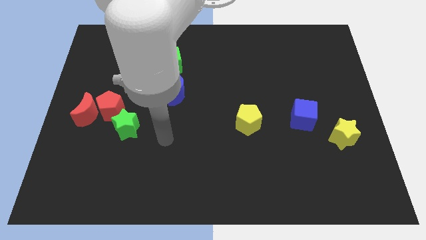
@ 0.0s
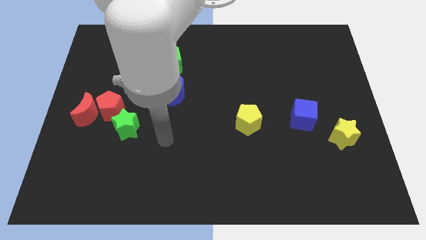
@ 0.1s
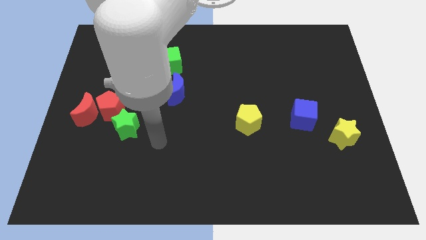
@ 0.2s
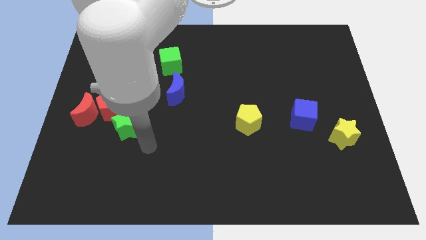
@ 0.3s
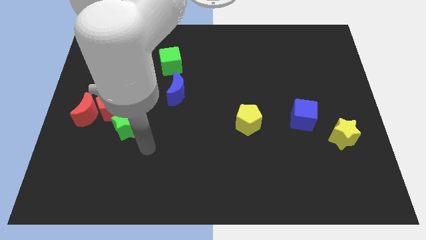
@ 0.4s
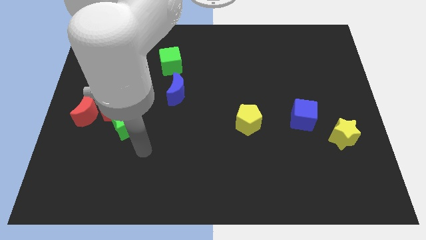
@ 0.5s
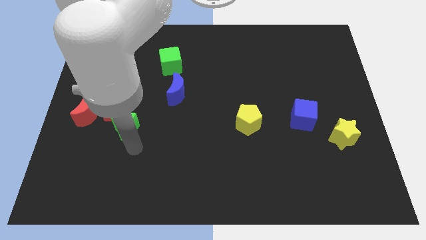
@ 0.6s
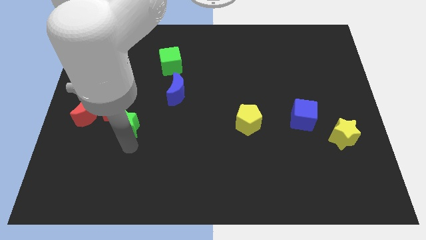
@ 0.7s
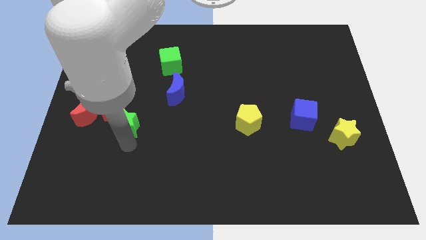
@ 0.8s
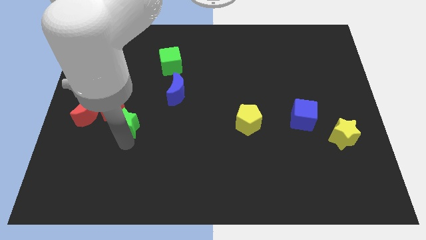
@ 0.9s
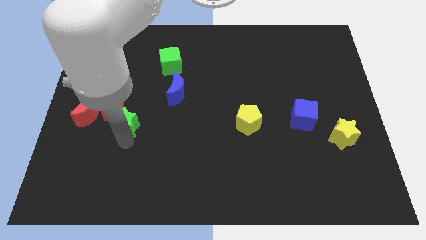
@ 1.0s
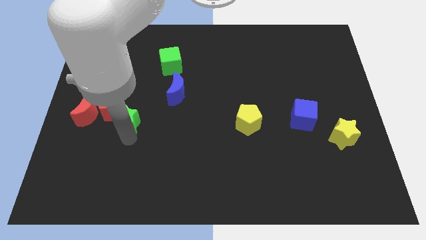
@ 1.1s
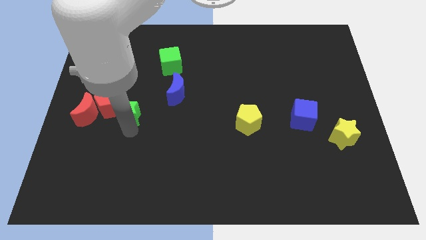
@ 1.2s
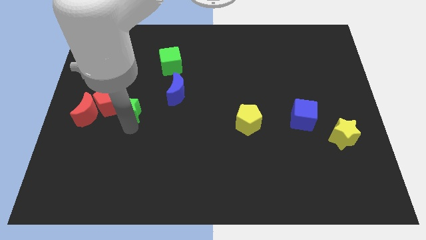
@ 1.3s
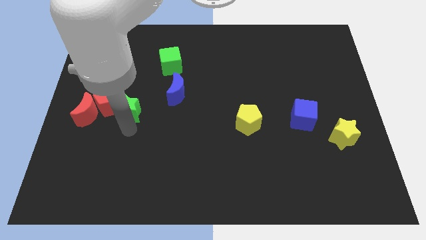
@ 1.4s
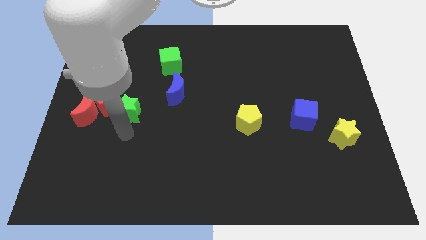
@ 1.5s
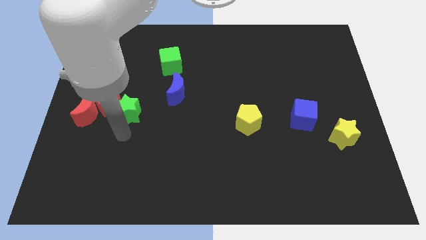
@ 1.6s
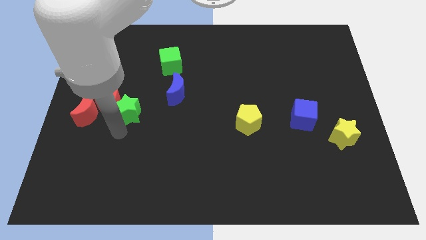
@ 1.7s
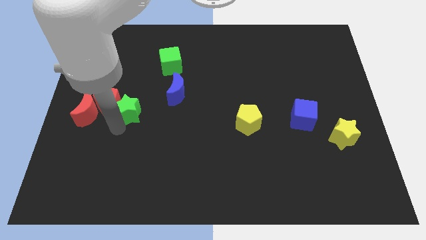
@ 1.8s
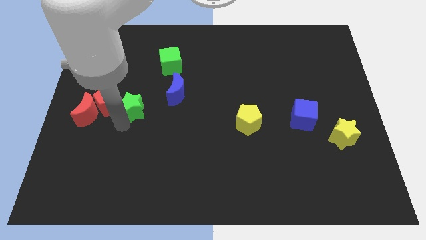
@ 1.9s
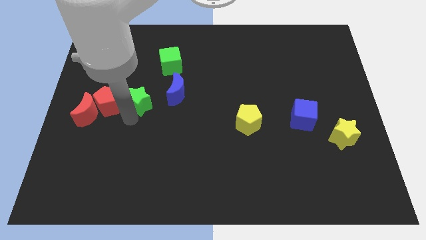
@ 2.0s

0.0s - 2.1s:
push the green star to the right of the red pentagon

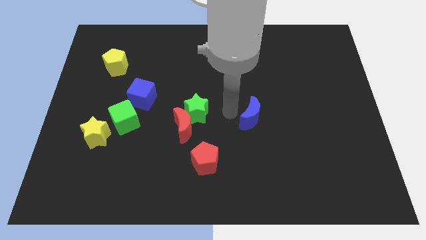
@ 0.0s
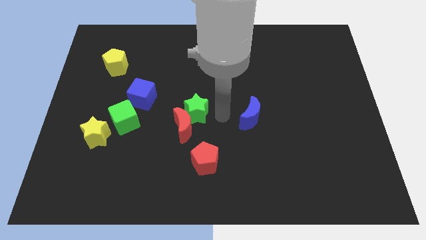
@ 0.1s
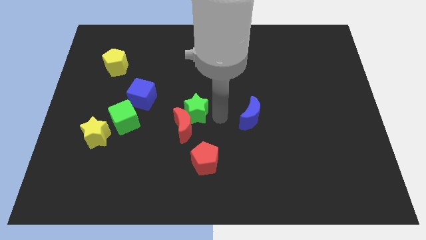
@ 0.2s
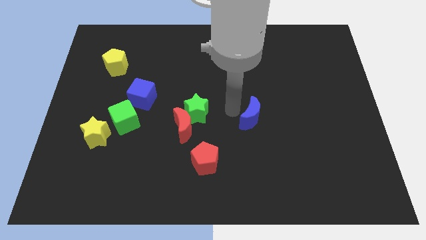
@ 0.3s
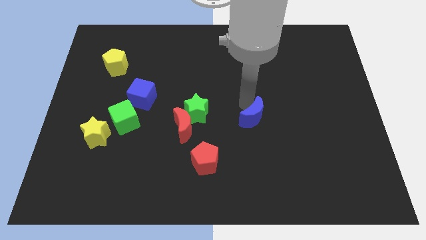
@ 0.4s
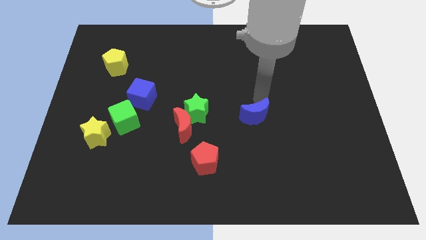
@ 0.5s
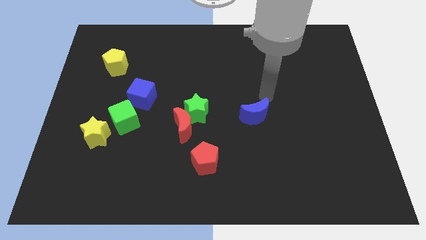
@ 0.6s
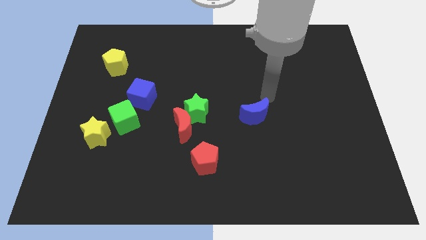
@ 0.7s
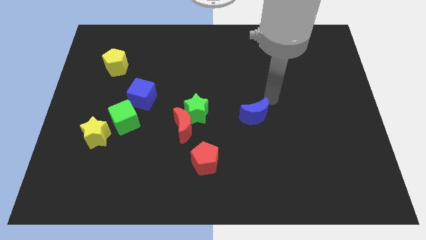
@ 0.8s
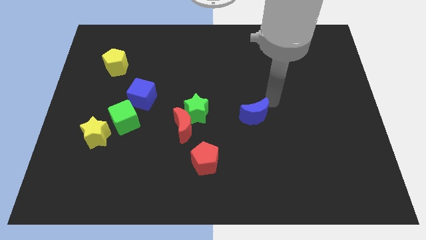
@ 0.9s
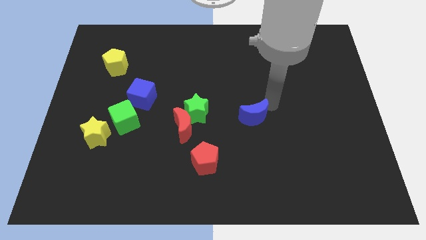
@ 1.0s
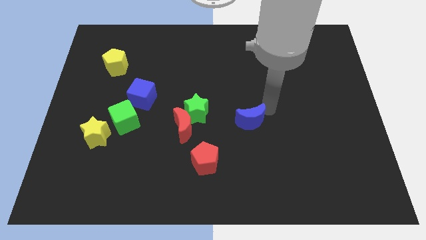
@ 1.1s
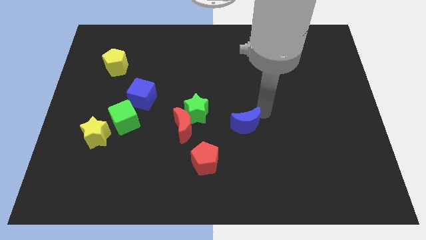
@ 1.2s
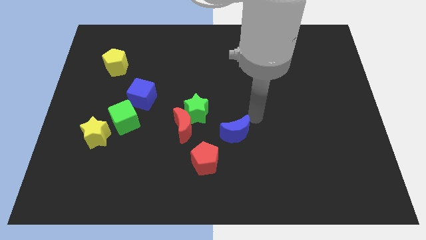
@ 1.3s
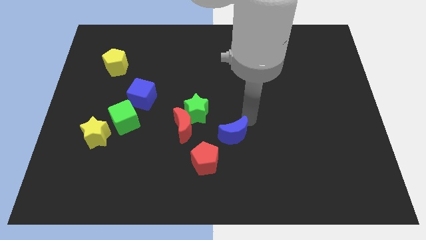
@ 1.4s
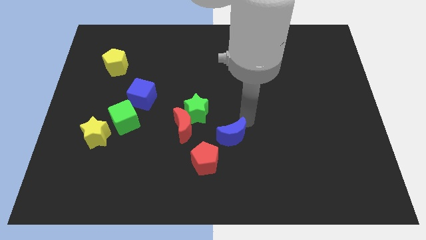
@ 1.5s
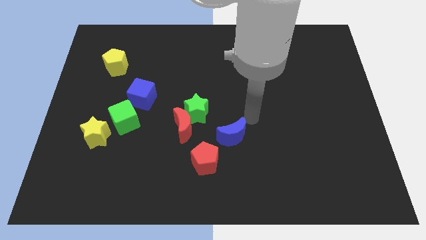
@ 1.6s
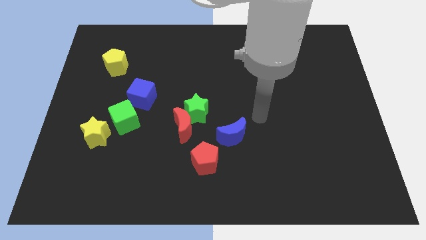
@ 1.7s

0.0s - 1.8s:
push the blue moon diagonally above the top right side of the blue moon

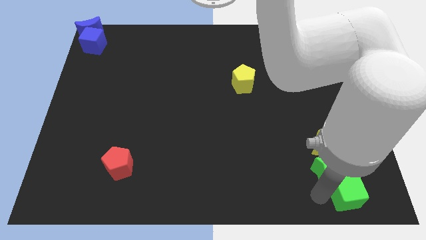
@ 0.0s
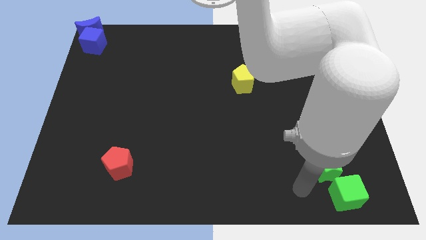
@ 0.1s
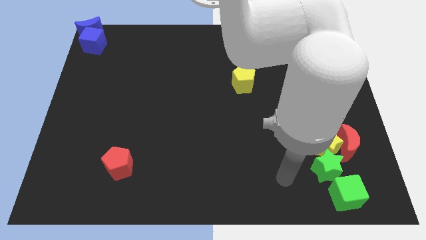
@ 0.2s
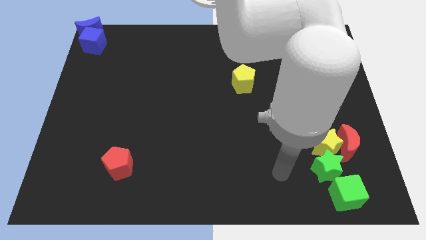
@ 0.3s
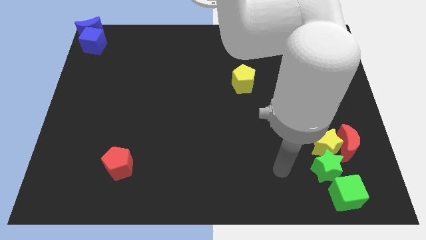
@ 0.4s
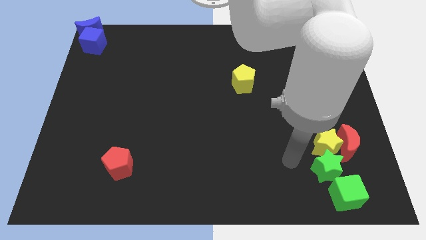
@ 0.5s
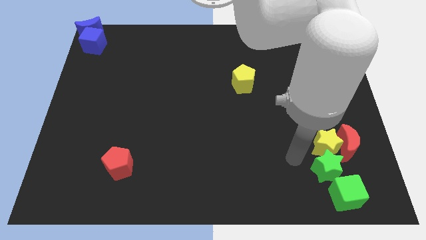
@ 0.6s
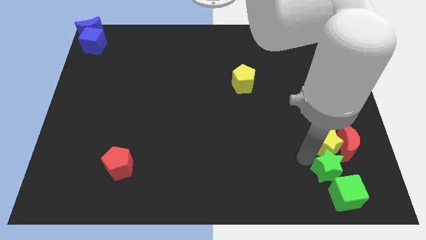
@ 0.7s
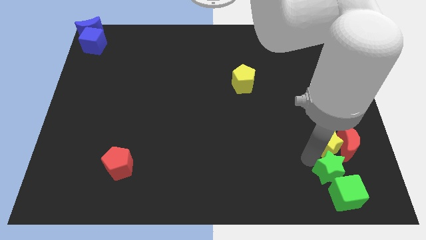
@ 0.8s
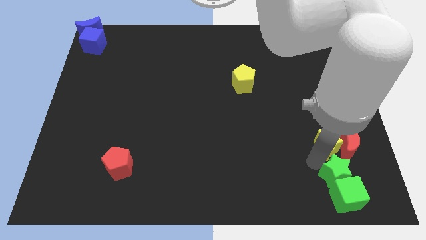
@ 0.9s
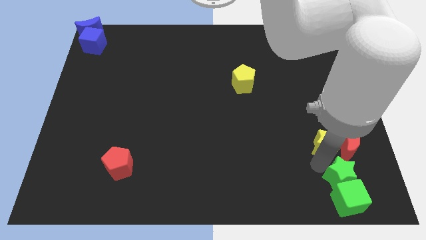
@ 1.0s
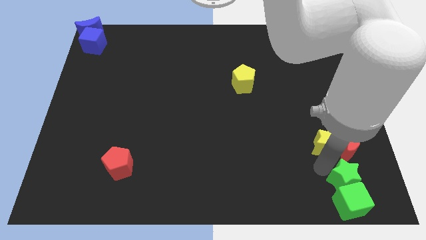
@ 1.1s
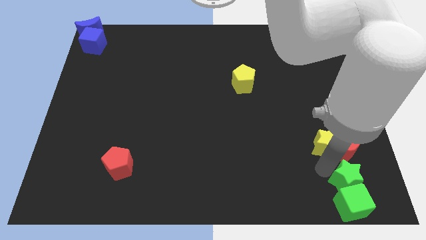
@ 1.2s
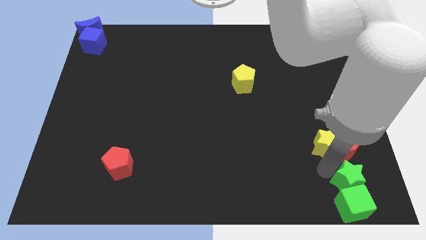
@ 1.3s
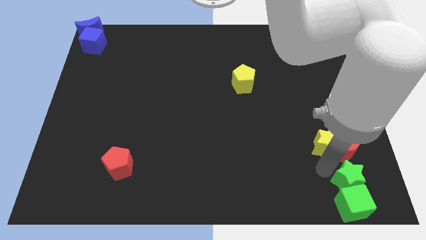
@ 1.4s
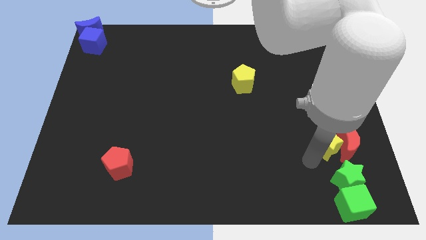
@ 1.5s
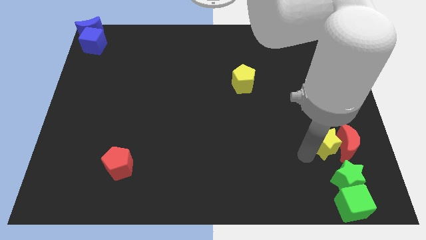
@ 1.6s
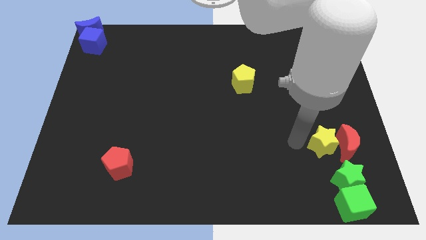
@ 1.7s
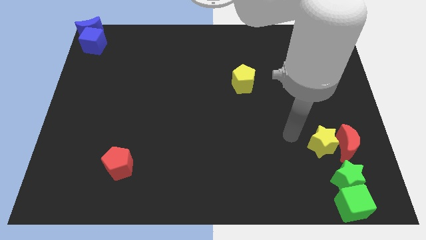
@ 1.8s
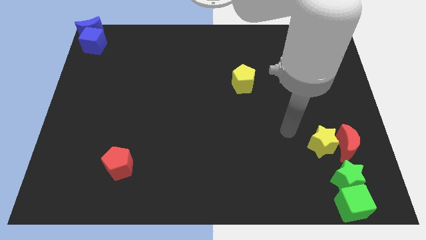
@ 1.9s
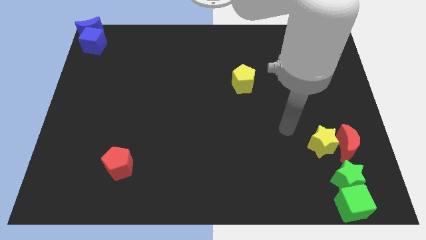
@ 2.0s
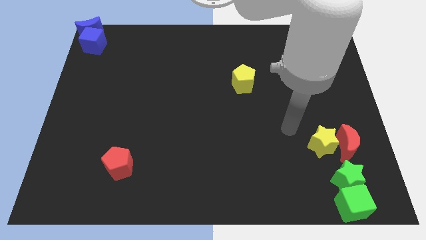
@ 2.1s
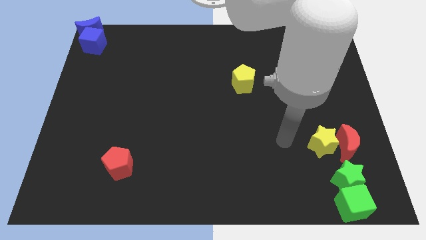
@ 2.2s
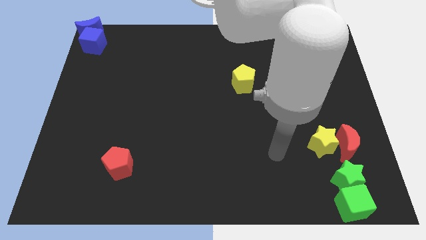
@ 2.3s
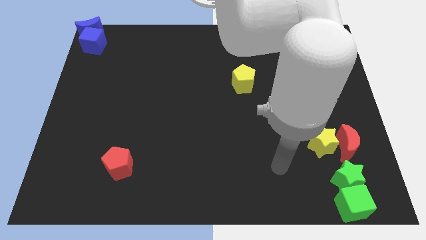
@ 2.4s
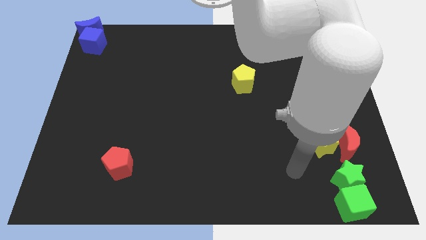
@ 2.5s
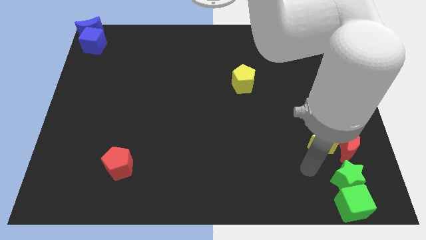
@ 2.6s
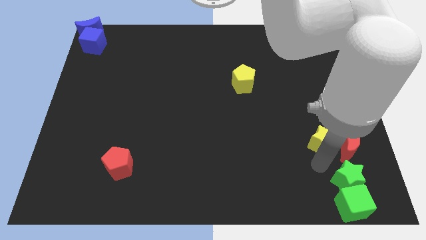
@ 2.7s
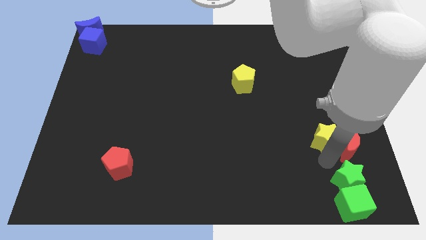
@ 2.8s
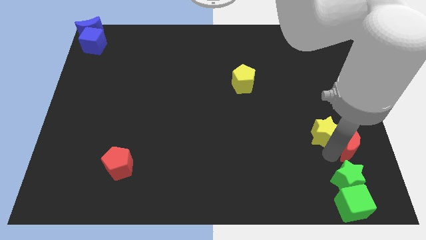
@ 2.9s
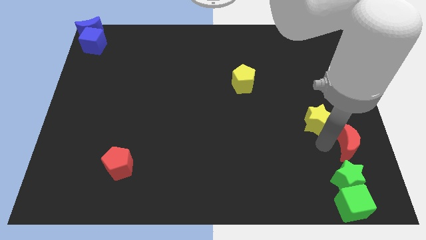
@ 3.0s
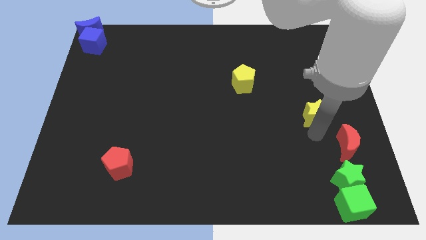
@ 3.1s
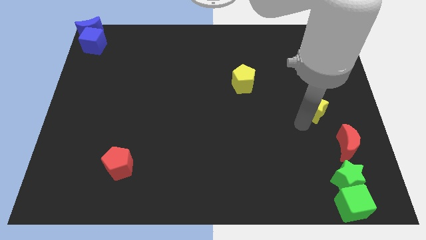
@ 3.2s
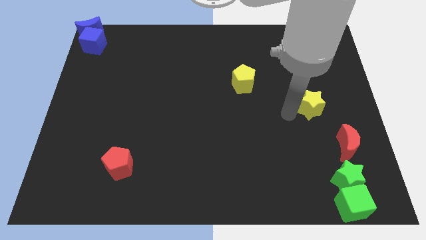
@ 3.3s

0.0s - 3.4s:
separate the yellow star from a group of blocks

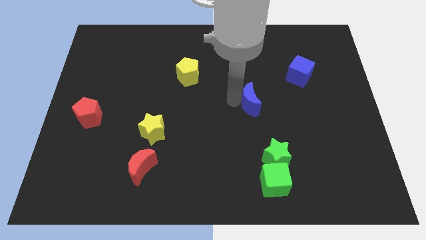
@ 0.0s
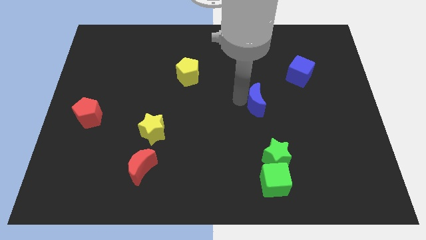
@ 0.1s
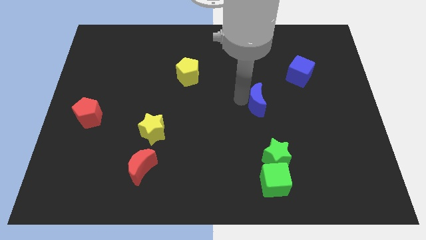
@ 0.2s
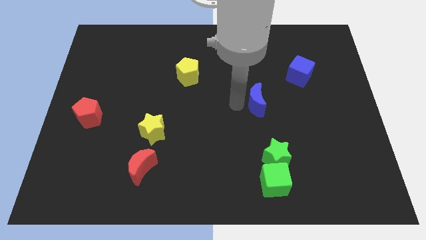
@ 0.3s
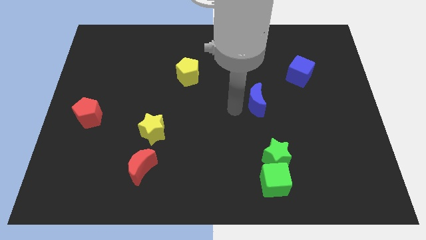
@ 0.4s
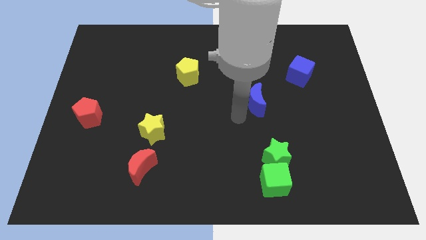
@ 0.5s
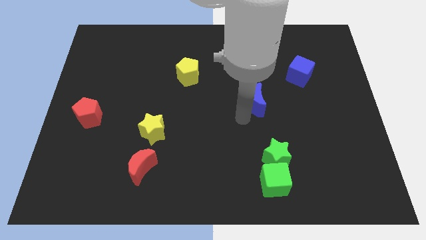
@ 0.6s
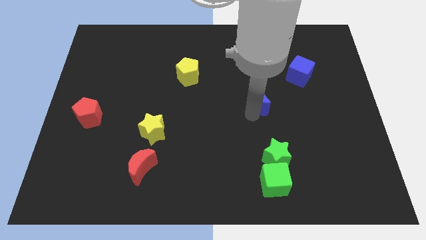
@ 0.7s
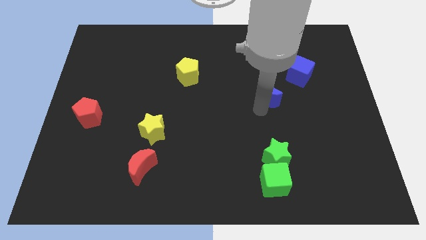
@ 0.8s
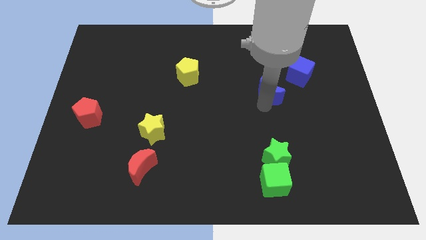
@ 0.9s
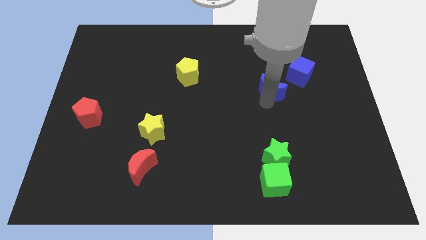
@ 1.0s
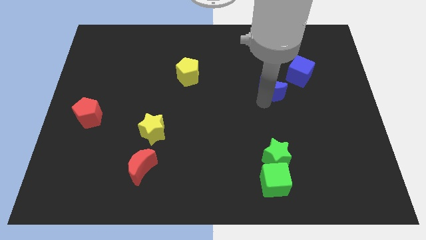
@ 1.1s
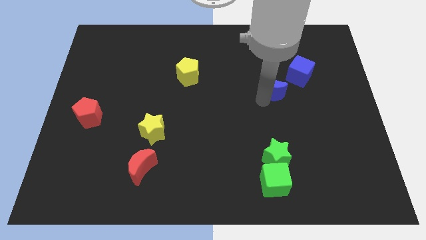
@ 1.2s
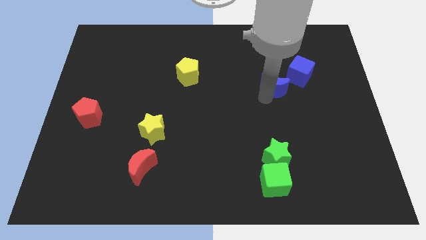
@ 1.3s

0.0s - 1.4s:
place blue moon to the bottom left of the blue cube

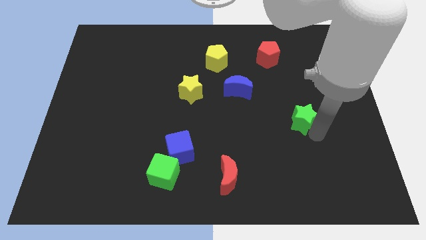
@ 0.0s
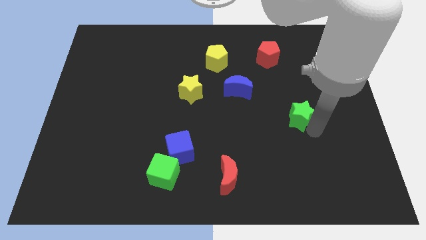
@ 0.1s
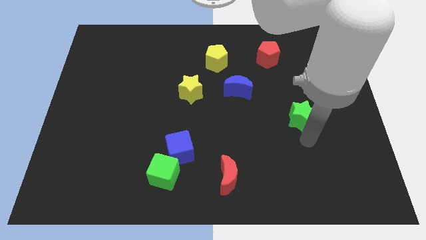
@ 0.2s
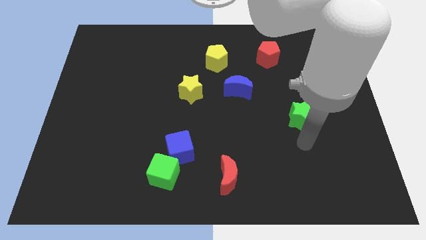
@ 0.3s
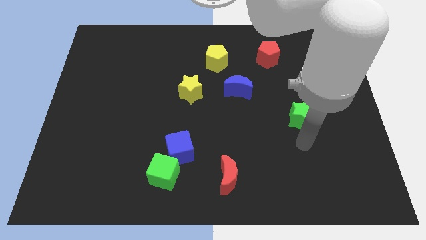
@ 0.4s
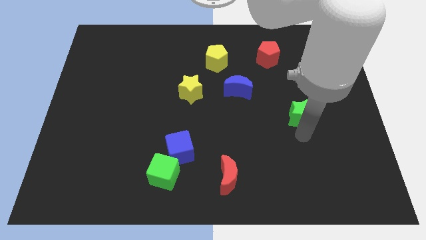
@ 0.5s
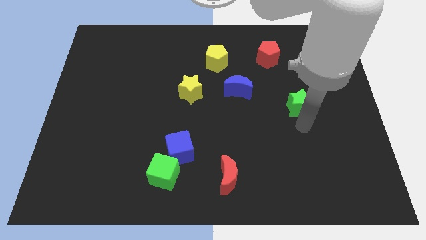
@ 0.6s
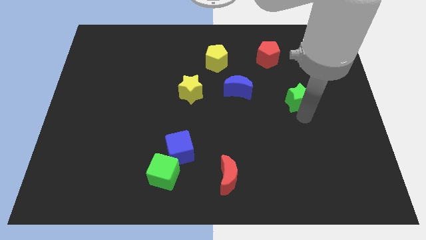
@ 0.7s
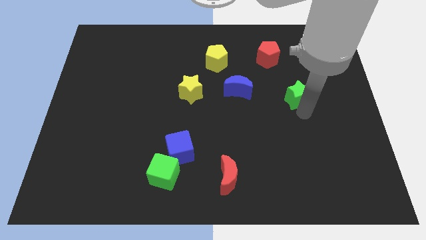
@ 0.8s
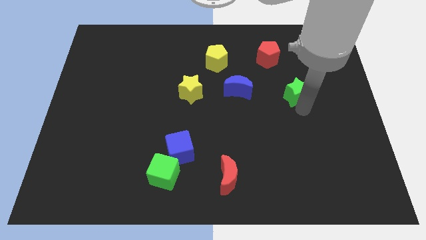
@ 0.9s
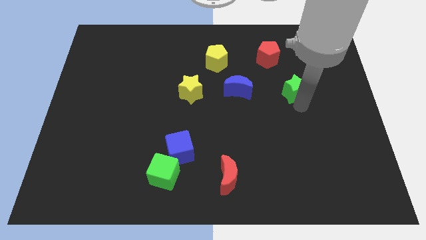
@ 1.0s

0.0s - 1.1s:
place the green star right to the blue moon
